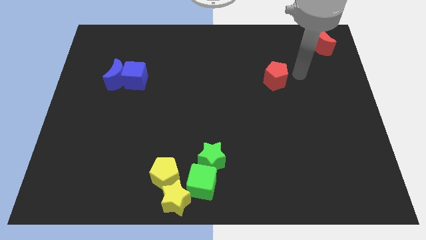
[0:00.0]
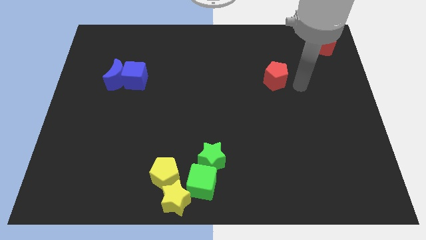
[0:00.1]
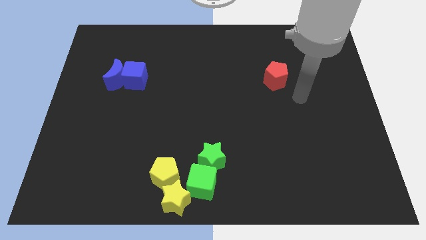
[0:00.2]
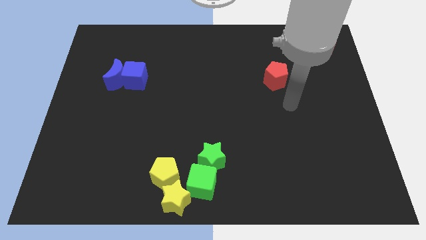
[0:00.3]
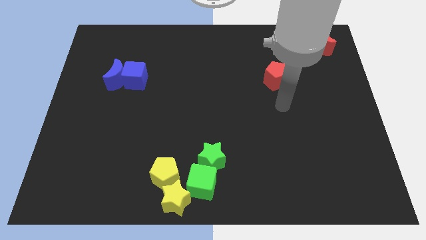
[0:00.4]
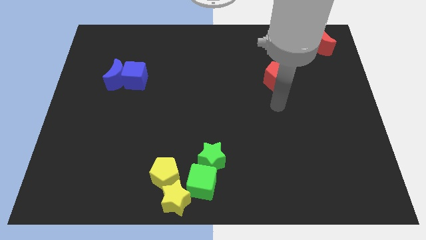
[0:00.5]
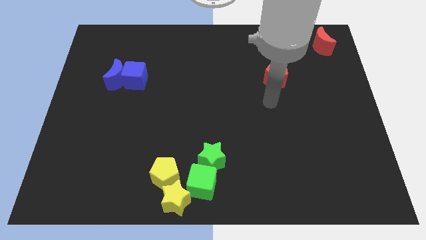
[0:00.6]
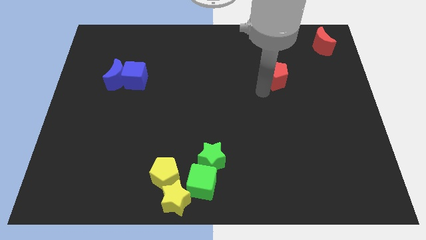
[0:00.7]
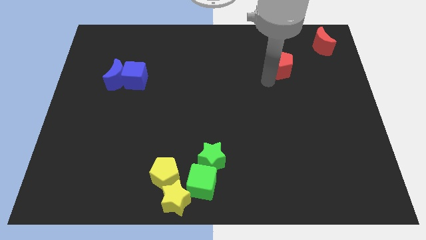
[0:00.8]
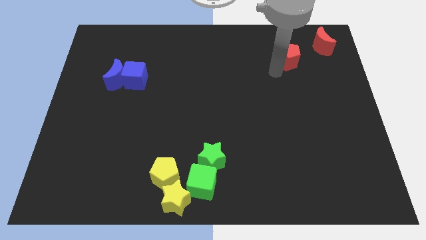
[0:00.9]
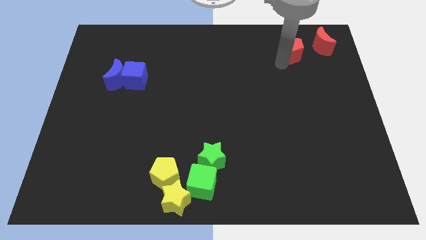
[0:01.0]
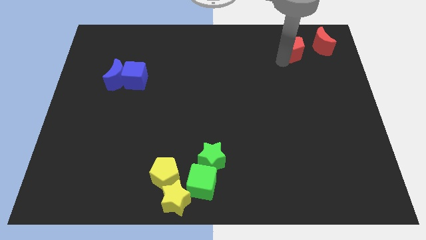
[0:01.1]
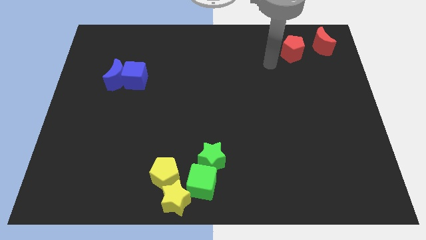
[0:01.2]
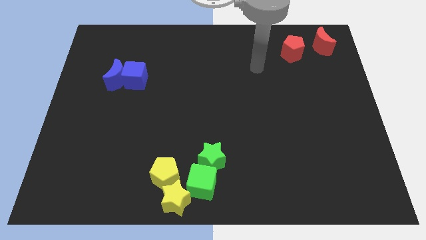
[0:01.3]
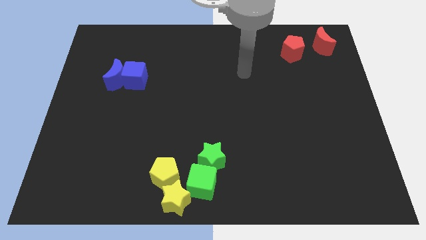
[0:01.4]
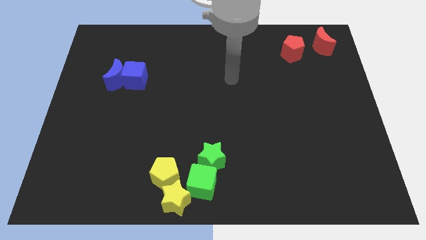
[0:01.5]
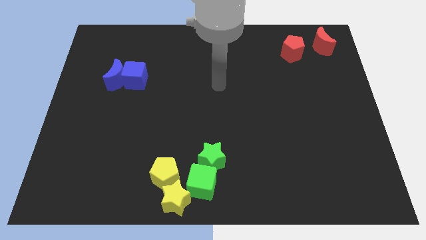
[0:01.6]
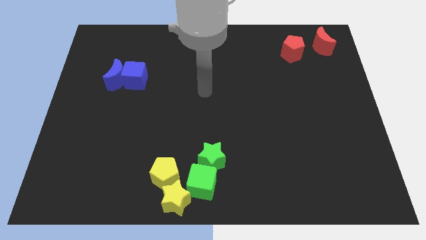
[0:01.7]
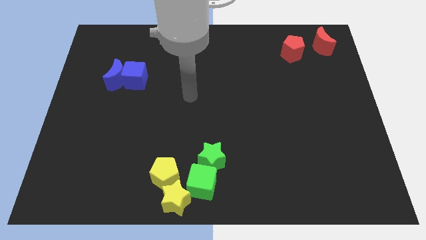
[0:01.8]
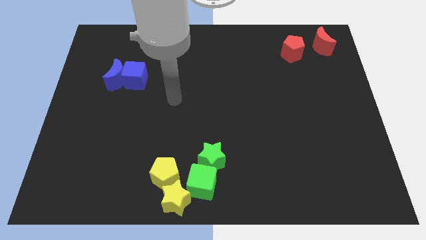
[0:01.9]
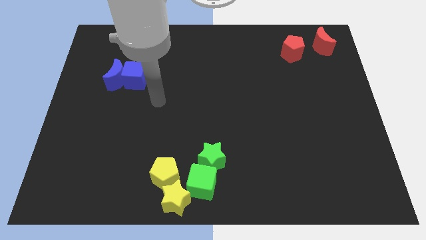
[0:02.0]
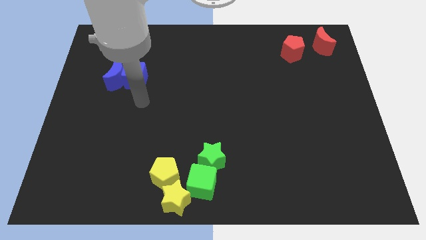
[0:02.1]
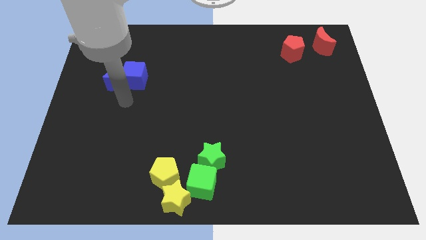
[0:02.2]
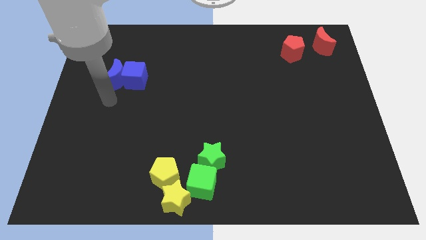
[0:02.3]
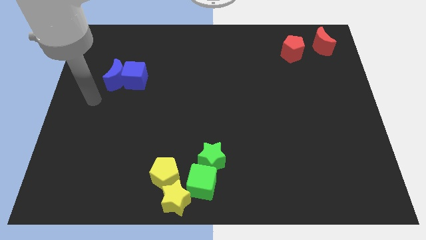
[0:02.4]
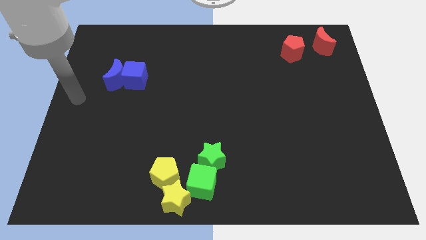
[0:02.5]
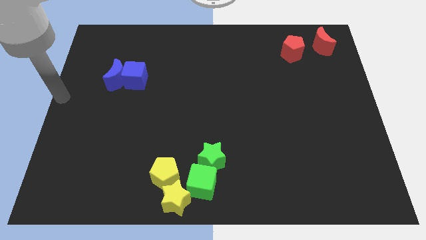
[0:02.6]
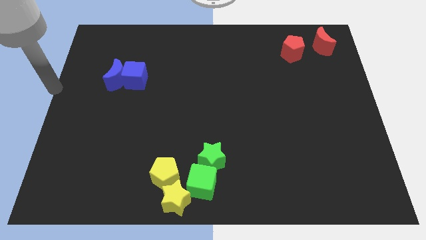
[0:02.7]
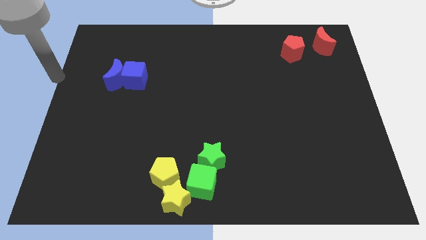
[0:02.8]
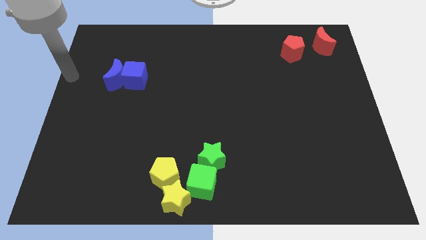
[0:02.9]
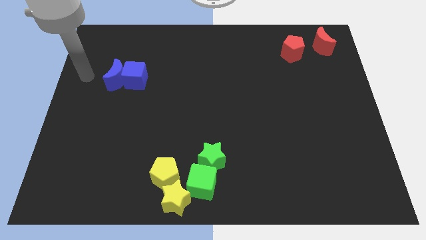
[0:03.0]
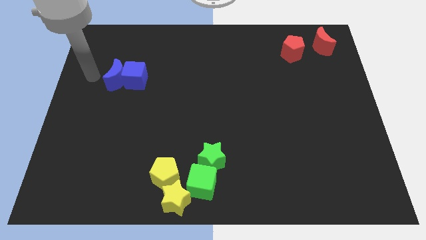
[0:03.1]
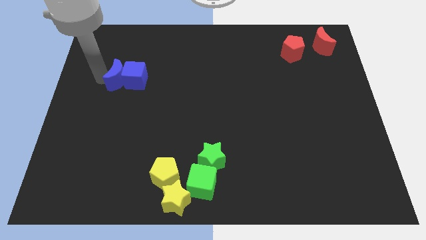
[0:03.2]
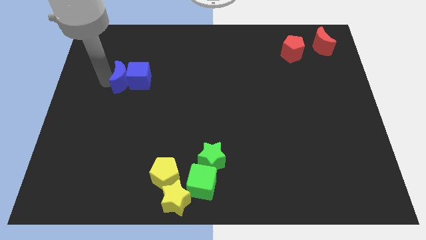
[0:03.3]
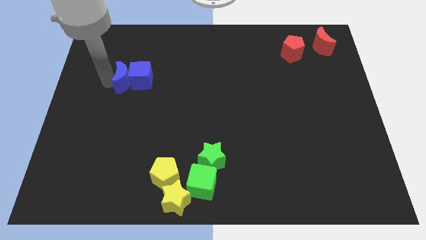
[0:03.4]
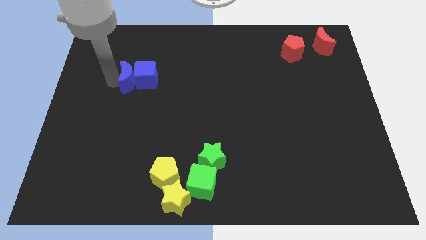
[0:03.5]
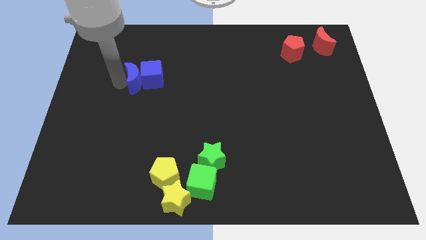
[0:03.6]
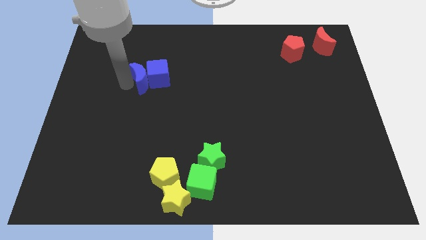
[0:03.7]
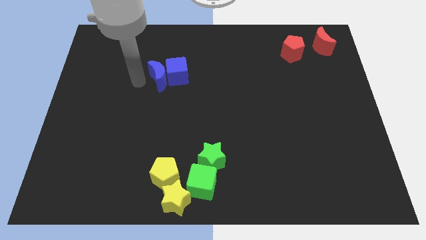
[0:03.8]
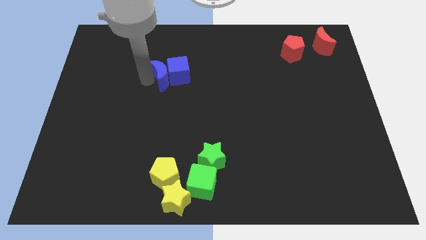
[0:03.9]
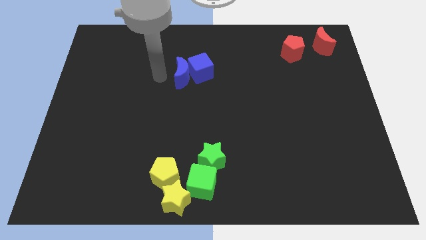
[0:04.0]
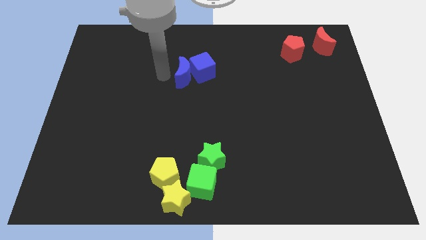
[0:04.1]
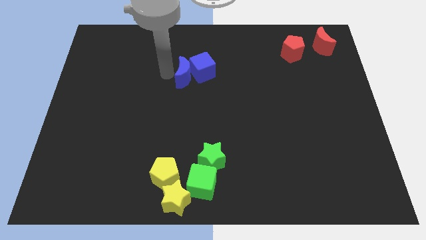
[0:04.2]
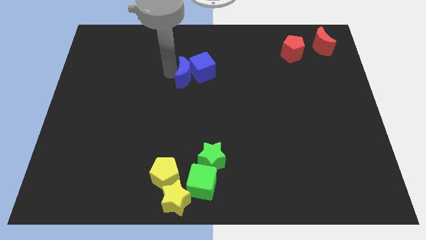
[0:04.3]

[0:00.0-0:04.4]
move red pentagon slightly and move blue cube towards right side with the blue moon

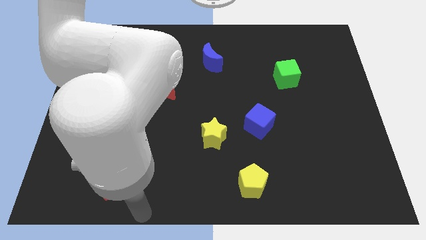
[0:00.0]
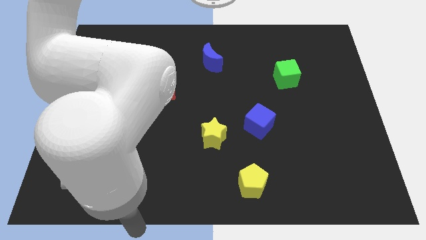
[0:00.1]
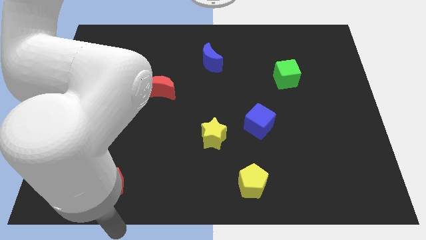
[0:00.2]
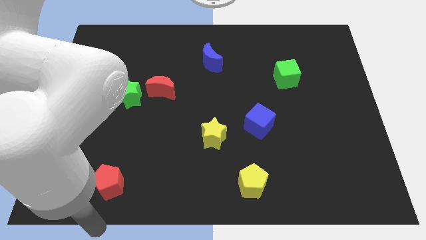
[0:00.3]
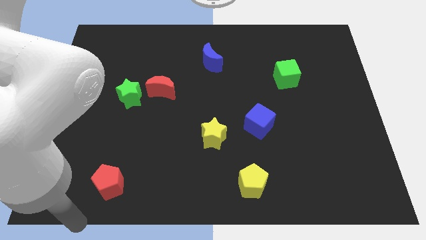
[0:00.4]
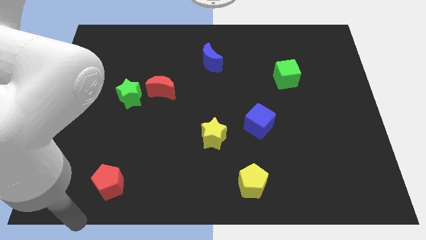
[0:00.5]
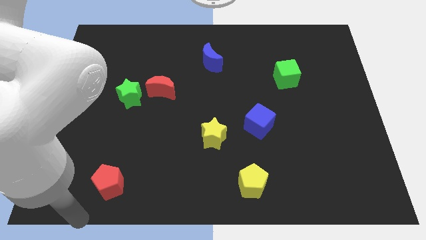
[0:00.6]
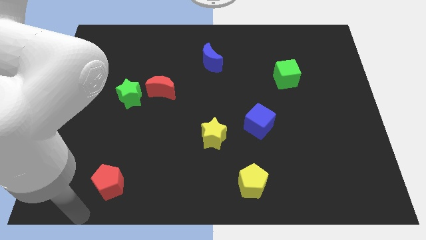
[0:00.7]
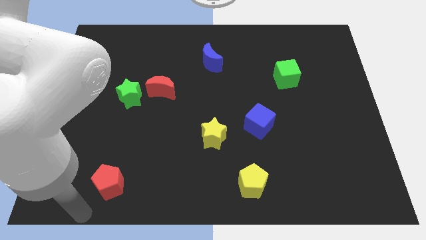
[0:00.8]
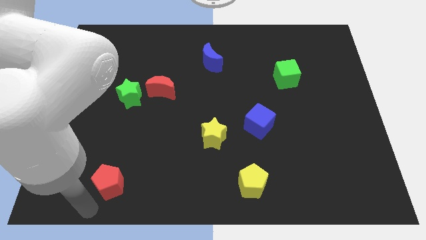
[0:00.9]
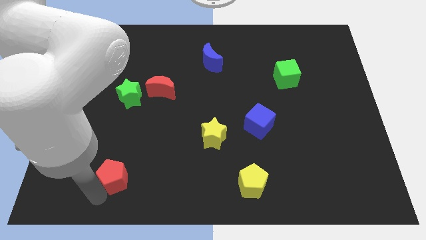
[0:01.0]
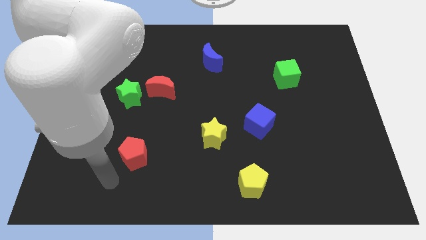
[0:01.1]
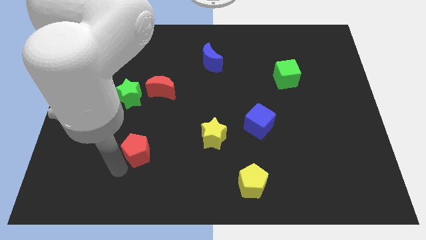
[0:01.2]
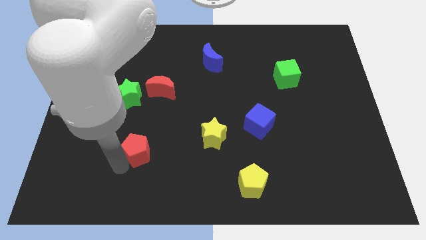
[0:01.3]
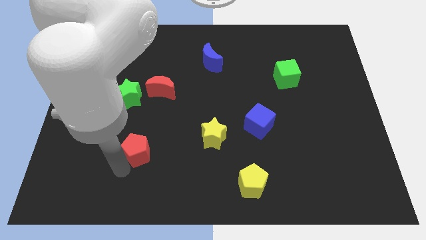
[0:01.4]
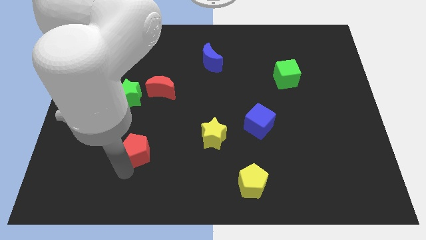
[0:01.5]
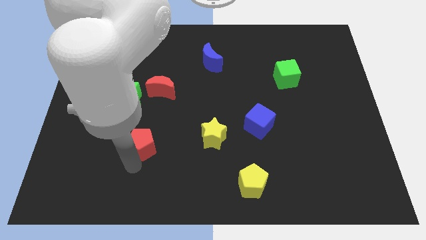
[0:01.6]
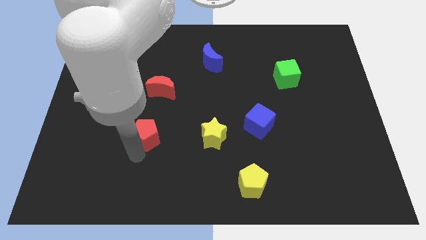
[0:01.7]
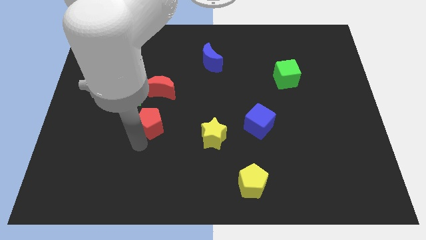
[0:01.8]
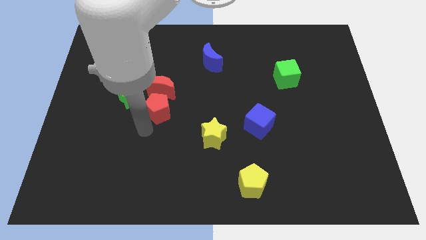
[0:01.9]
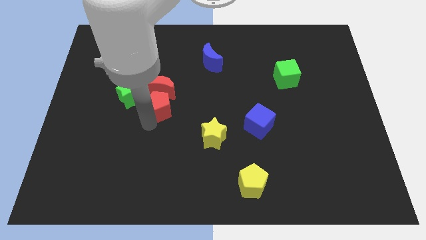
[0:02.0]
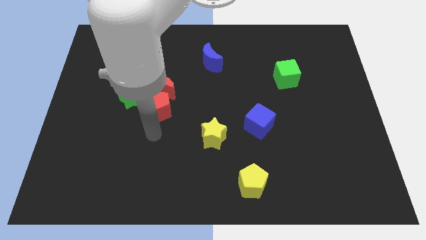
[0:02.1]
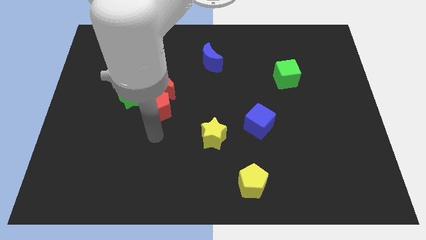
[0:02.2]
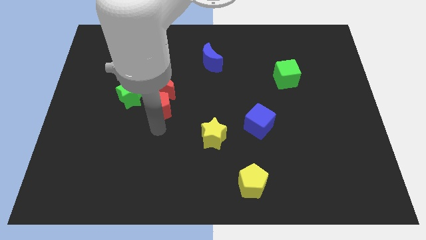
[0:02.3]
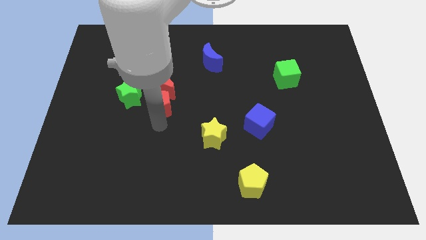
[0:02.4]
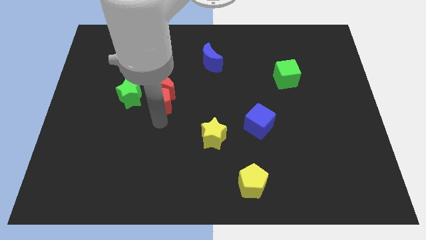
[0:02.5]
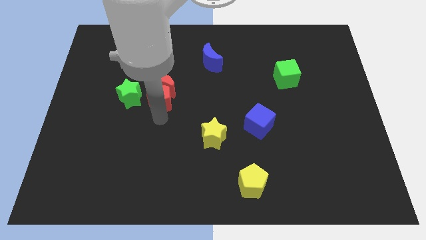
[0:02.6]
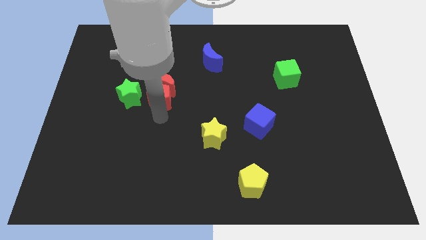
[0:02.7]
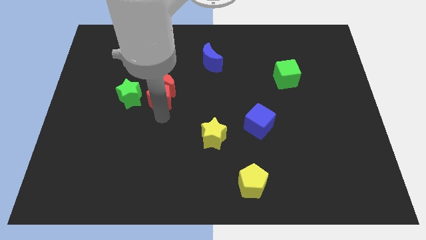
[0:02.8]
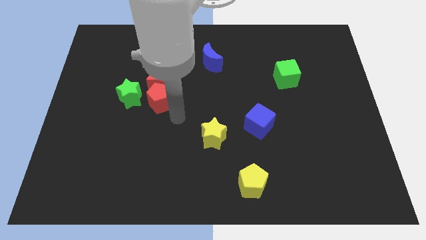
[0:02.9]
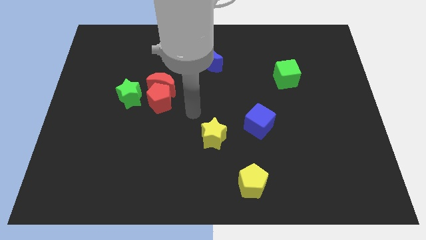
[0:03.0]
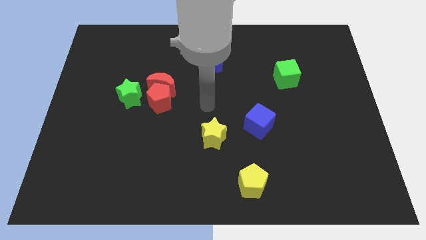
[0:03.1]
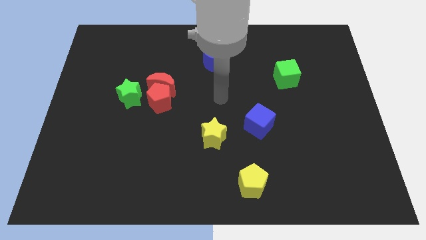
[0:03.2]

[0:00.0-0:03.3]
push the red pentagon into the red crescent

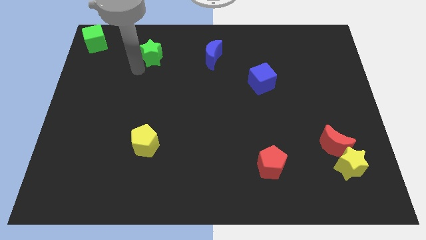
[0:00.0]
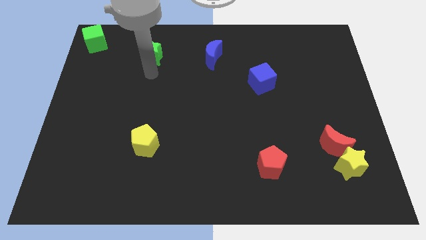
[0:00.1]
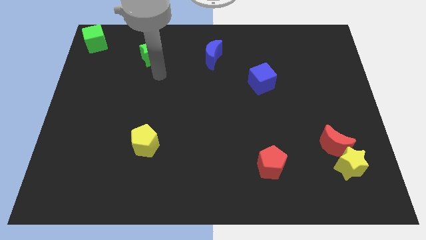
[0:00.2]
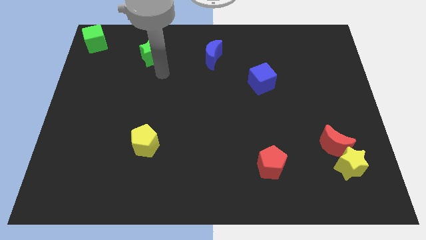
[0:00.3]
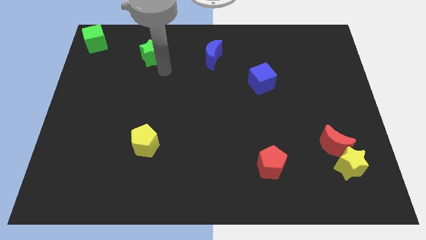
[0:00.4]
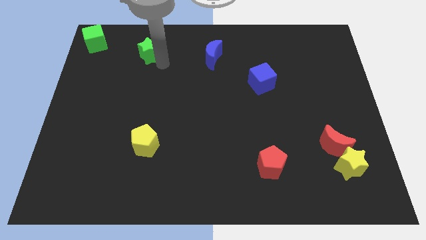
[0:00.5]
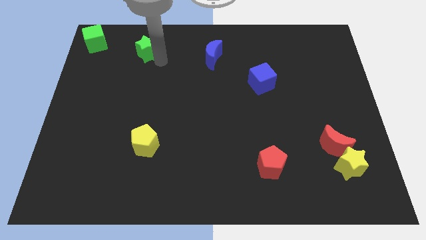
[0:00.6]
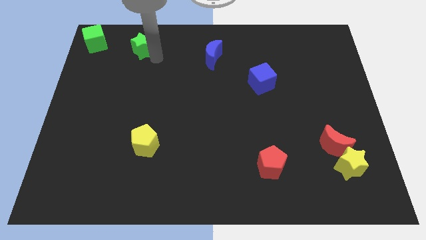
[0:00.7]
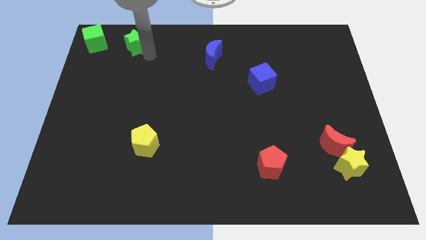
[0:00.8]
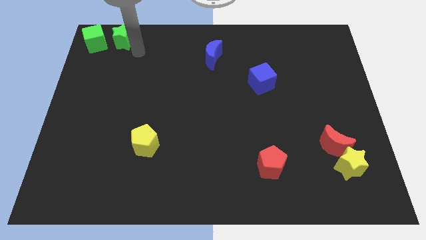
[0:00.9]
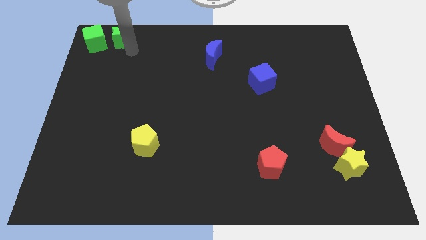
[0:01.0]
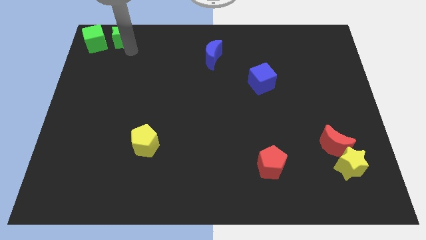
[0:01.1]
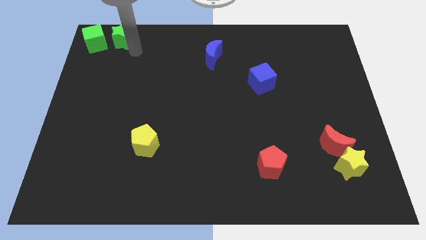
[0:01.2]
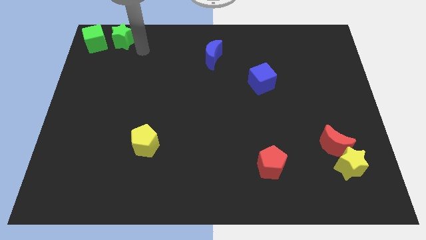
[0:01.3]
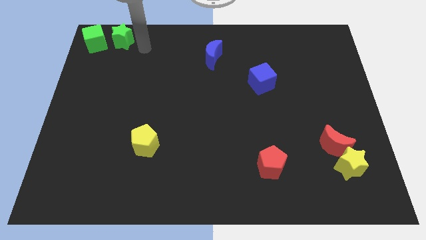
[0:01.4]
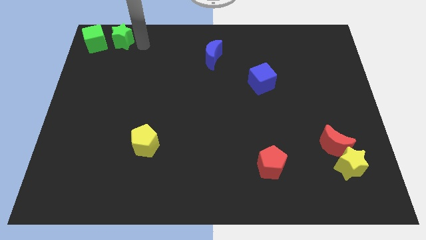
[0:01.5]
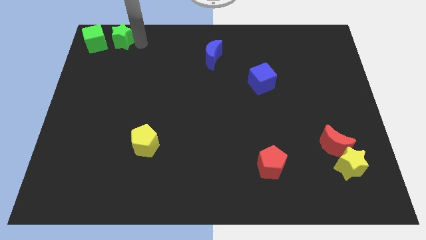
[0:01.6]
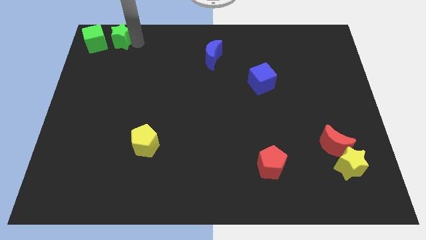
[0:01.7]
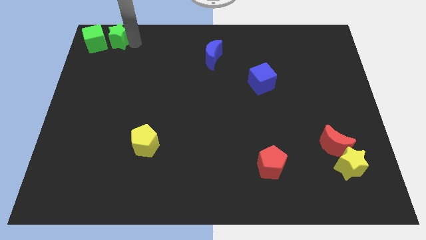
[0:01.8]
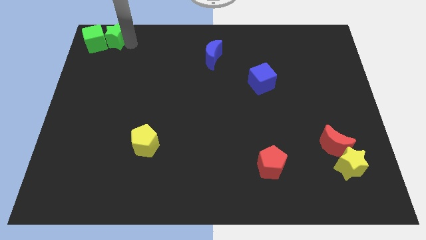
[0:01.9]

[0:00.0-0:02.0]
place the green star to the right of green cube
